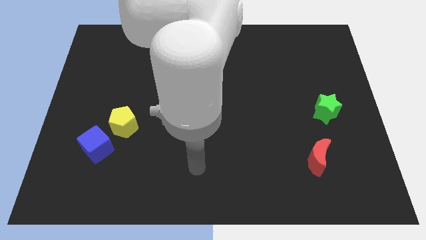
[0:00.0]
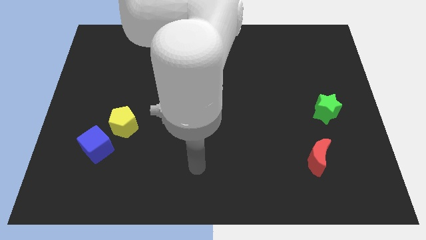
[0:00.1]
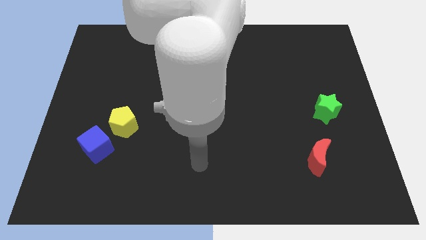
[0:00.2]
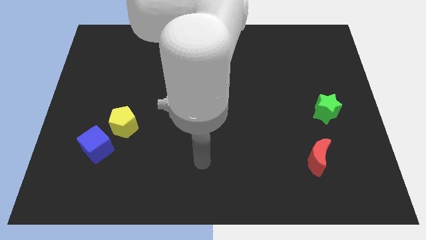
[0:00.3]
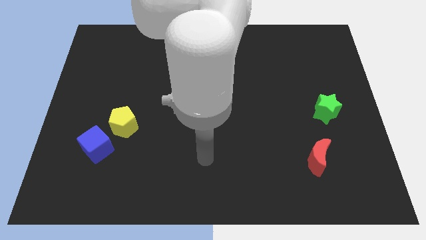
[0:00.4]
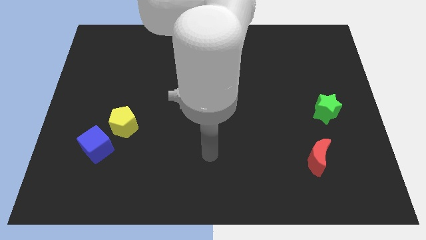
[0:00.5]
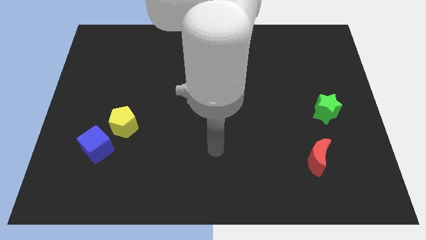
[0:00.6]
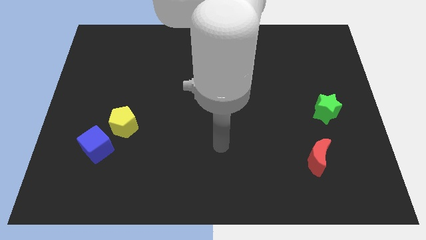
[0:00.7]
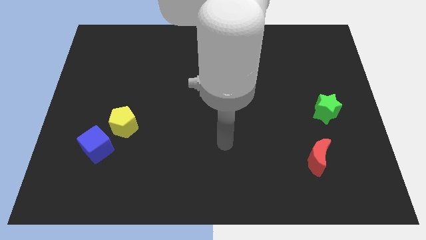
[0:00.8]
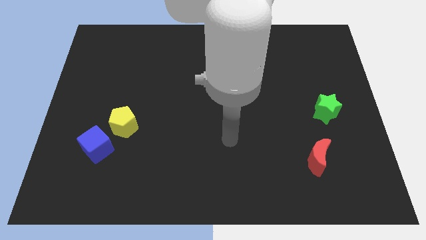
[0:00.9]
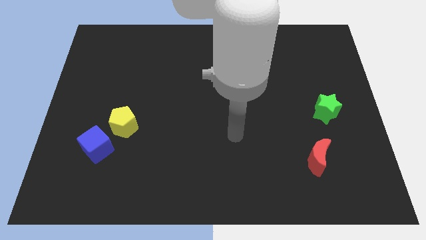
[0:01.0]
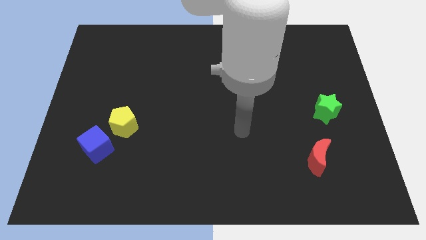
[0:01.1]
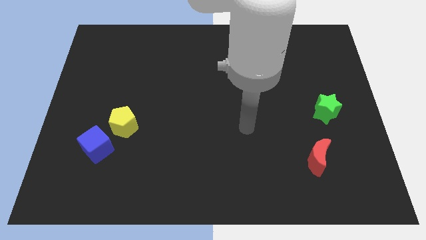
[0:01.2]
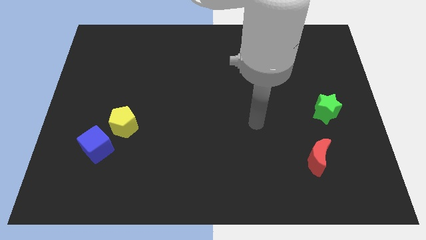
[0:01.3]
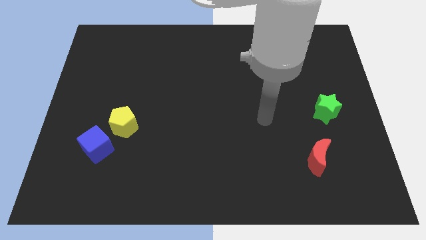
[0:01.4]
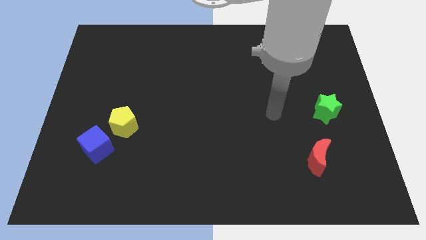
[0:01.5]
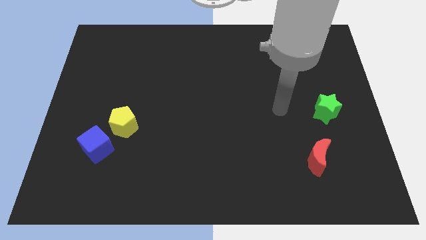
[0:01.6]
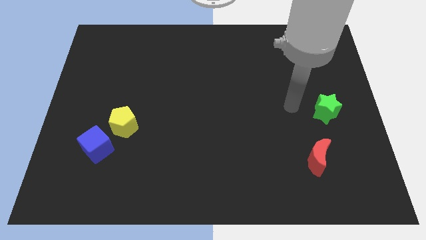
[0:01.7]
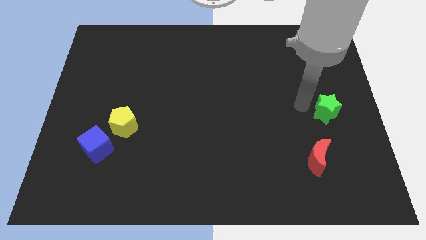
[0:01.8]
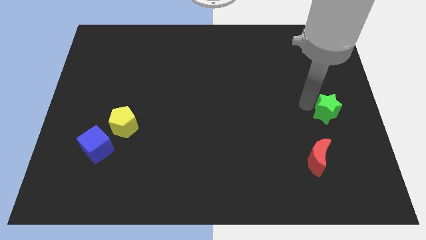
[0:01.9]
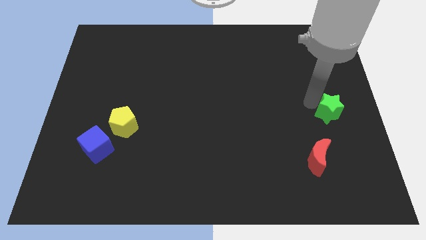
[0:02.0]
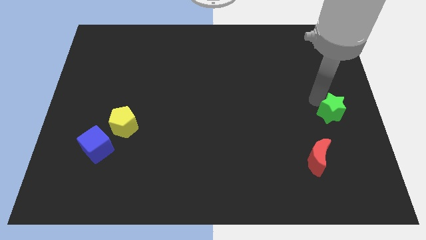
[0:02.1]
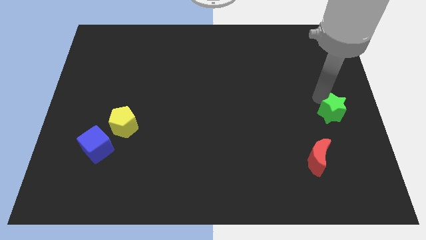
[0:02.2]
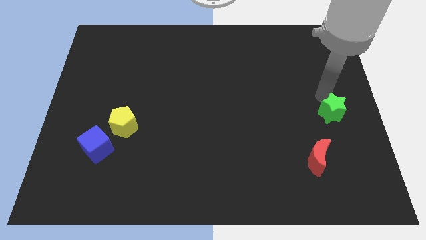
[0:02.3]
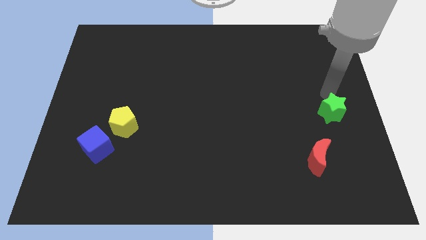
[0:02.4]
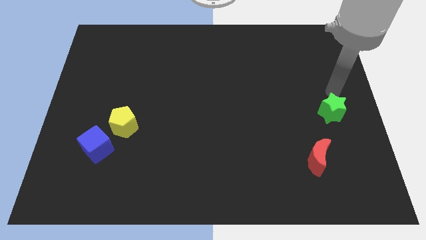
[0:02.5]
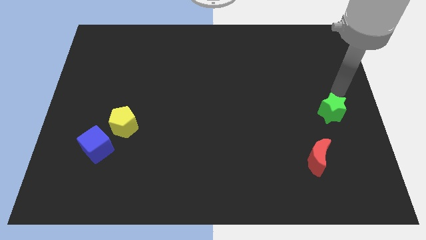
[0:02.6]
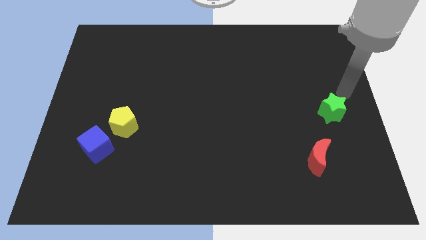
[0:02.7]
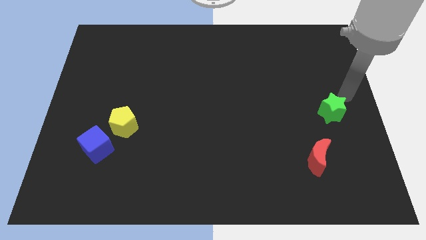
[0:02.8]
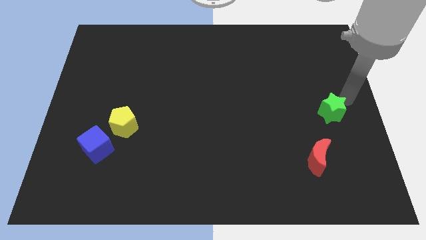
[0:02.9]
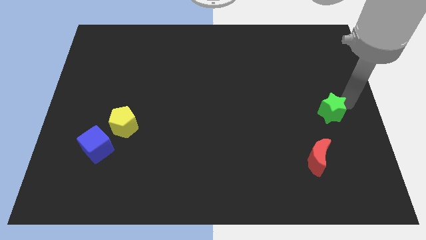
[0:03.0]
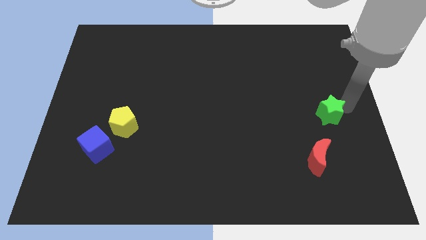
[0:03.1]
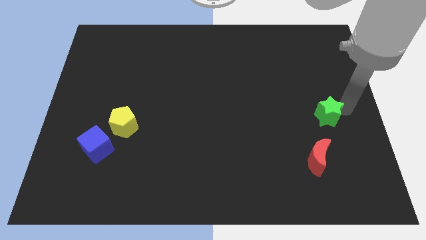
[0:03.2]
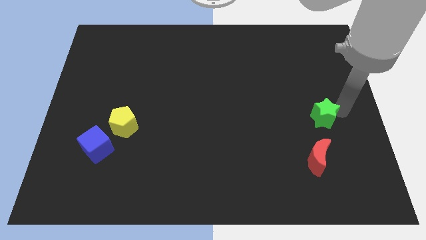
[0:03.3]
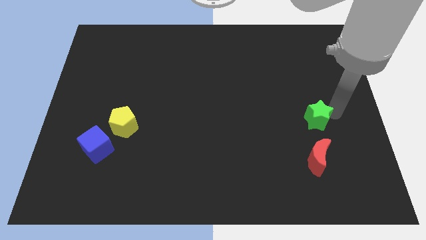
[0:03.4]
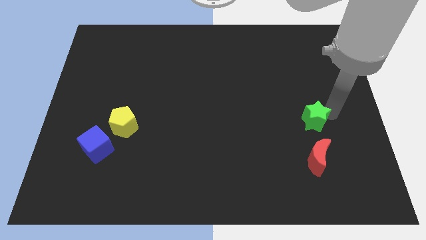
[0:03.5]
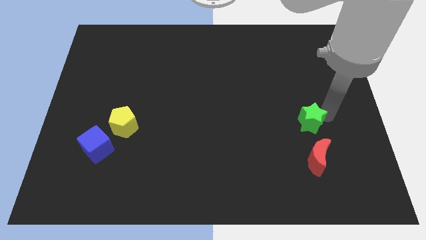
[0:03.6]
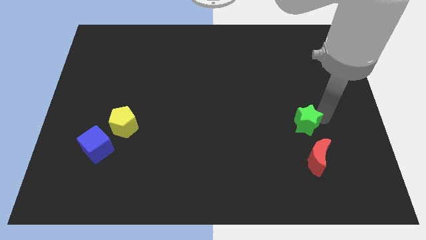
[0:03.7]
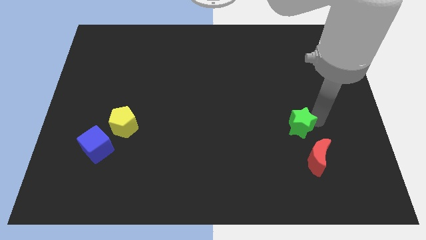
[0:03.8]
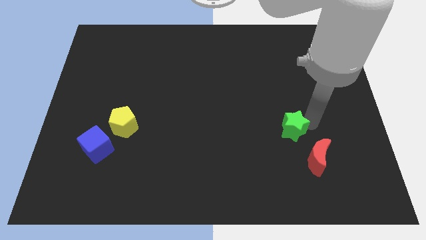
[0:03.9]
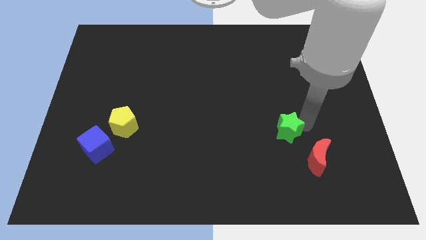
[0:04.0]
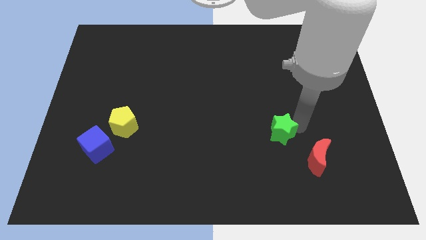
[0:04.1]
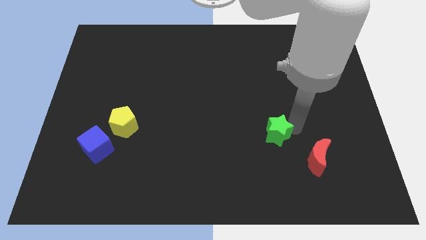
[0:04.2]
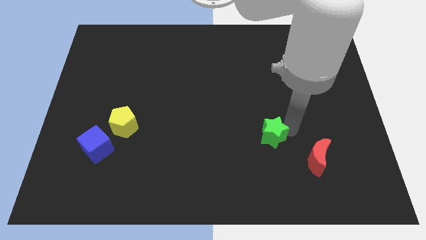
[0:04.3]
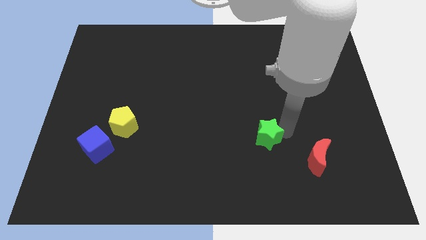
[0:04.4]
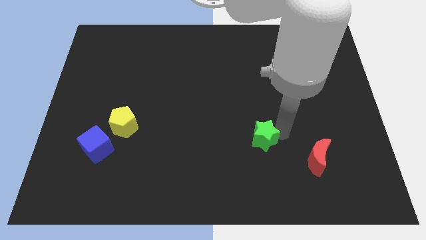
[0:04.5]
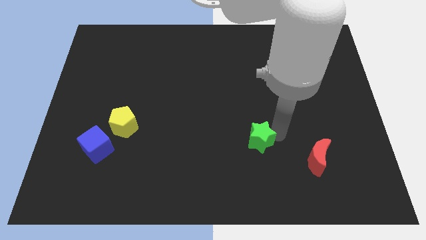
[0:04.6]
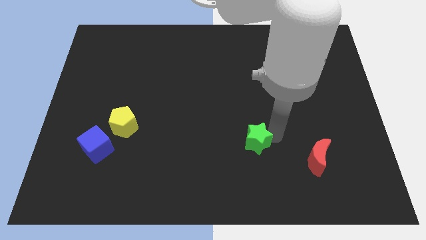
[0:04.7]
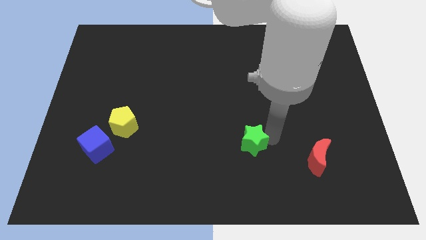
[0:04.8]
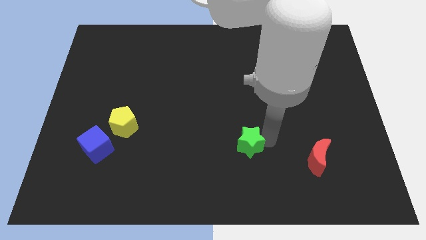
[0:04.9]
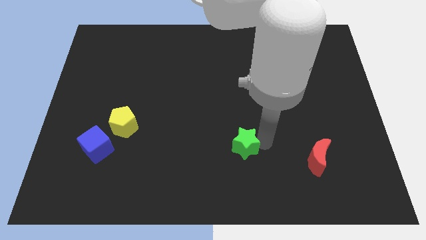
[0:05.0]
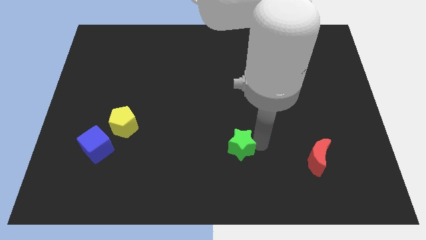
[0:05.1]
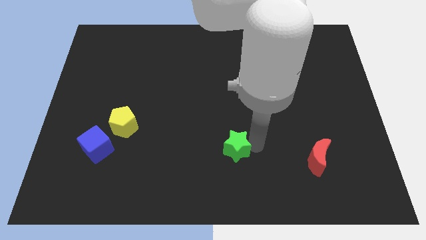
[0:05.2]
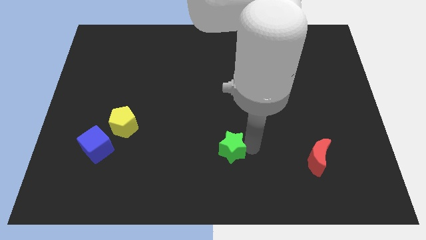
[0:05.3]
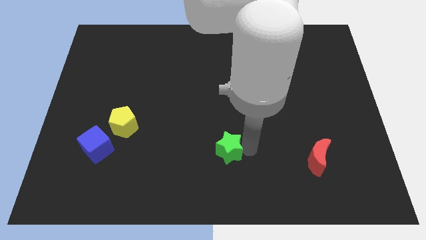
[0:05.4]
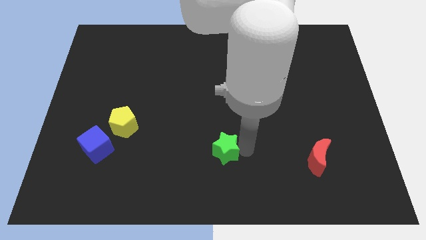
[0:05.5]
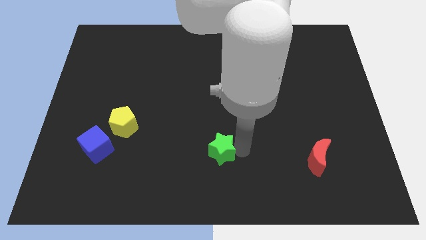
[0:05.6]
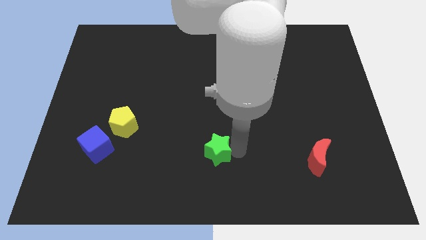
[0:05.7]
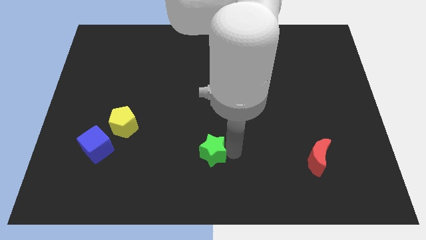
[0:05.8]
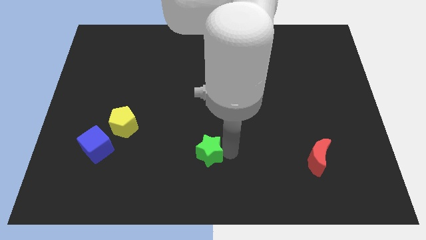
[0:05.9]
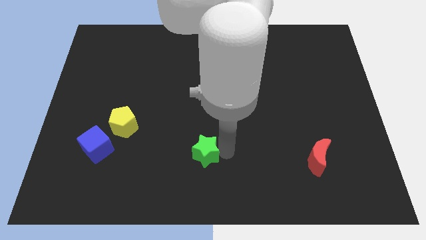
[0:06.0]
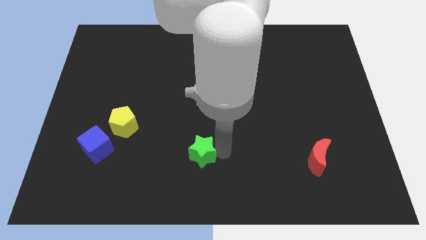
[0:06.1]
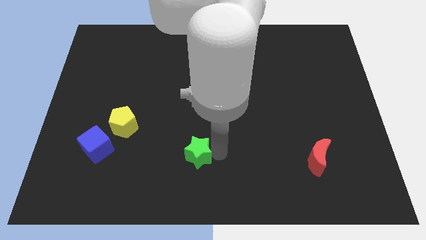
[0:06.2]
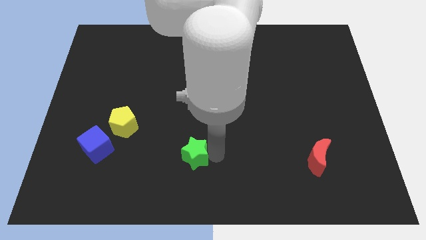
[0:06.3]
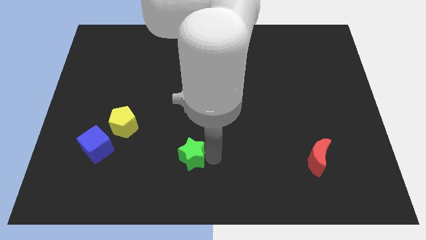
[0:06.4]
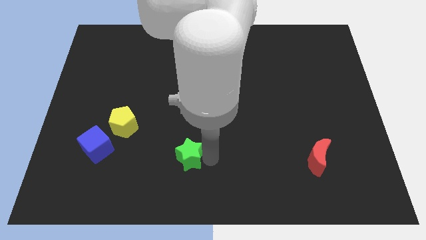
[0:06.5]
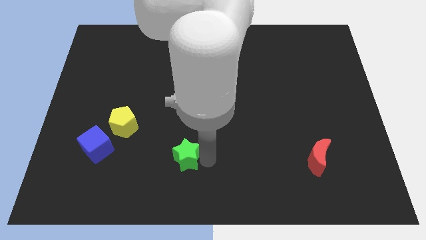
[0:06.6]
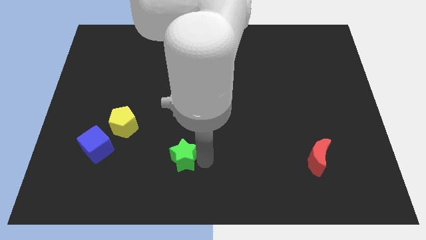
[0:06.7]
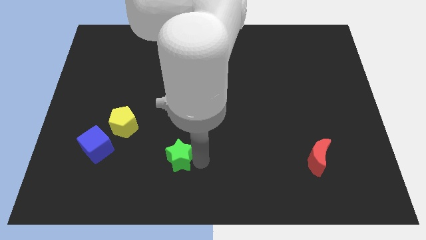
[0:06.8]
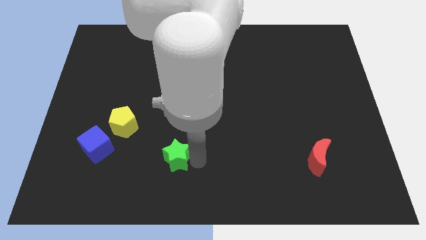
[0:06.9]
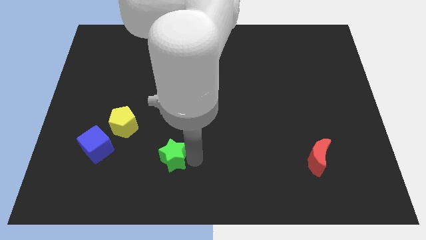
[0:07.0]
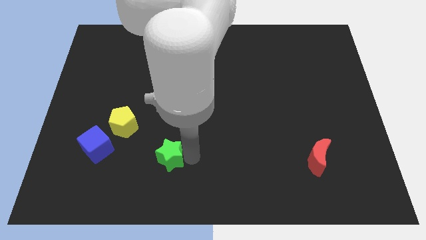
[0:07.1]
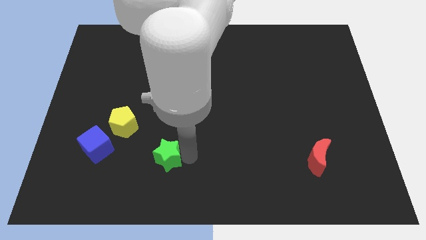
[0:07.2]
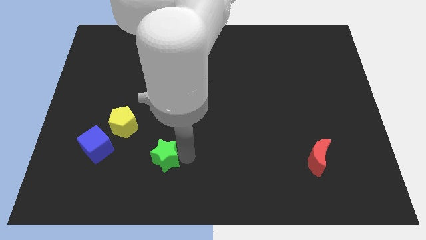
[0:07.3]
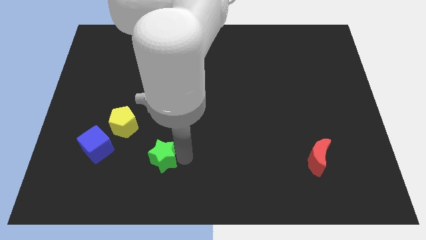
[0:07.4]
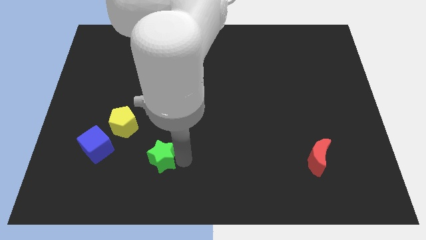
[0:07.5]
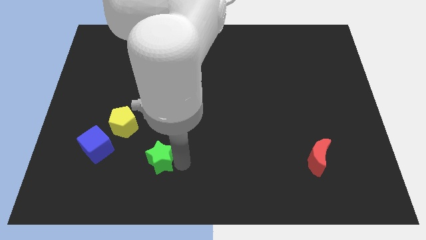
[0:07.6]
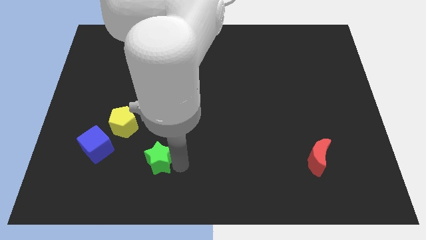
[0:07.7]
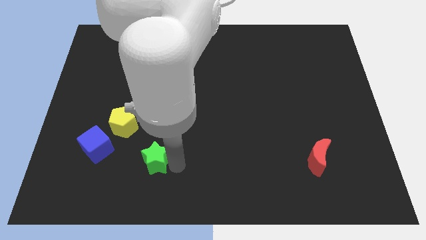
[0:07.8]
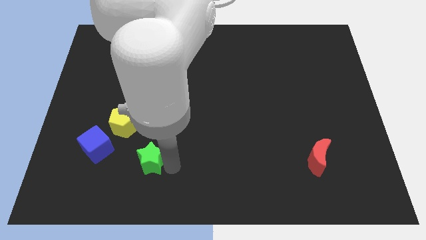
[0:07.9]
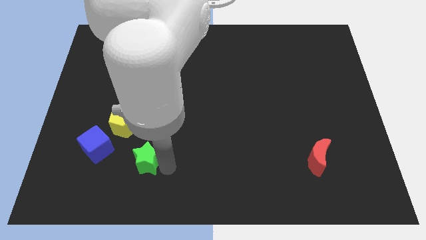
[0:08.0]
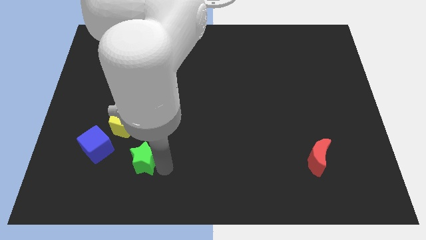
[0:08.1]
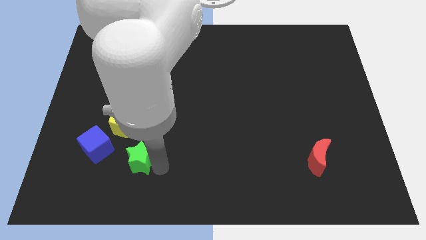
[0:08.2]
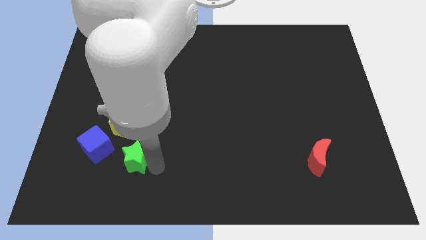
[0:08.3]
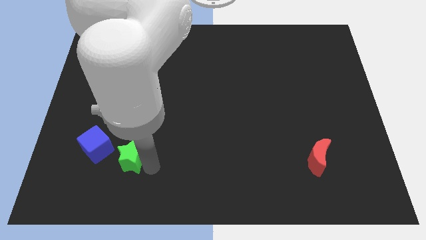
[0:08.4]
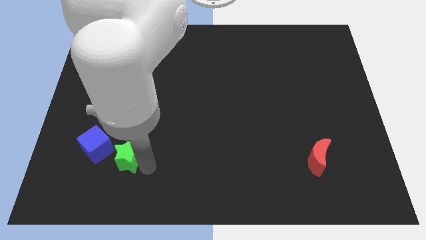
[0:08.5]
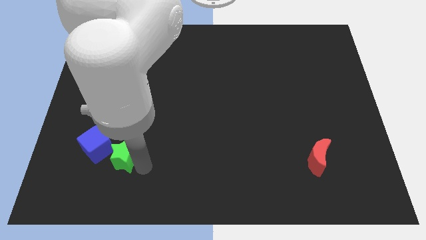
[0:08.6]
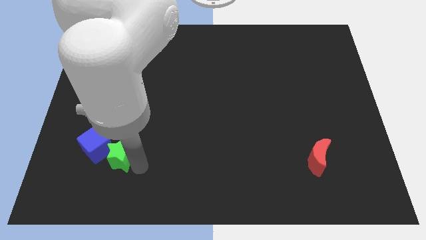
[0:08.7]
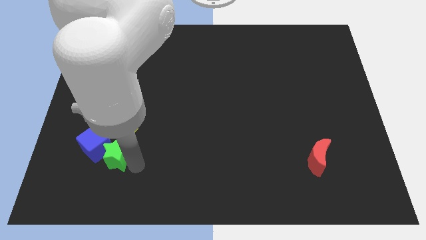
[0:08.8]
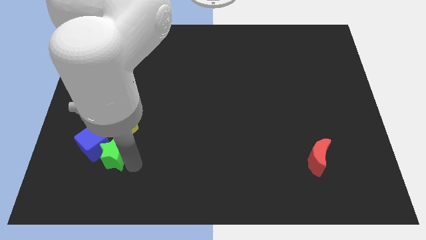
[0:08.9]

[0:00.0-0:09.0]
push the star to the cube
